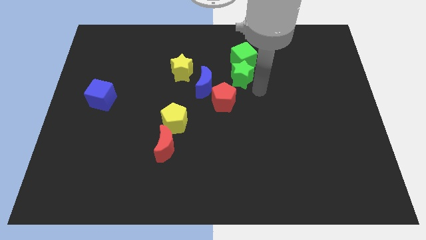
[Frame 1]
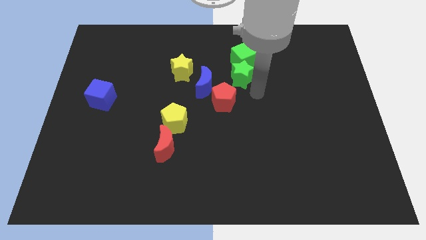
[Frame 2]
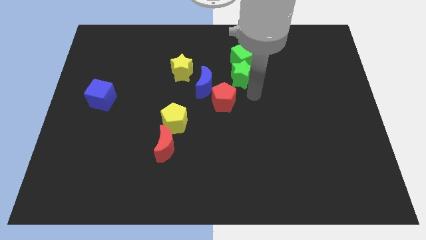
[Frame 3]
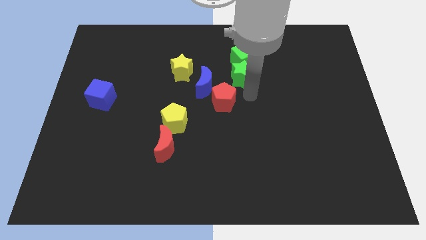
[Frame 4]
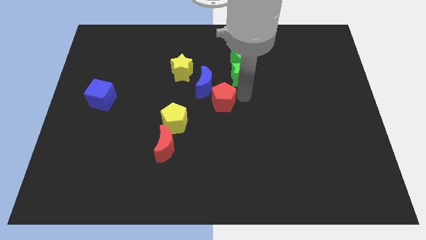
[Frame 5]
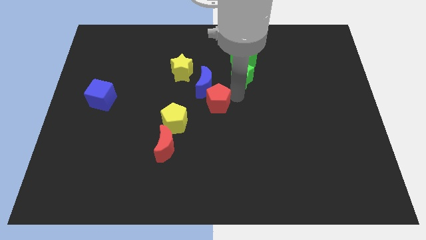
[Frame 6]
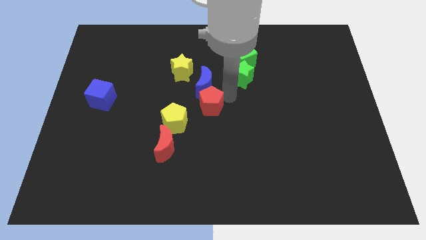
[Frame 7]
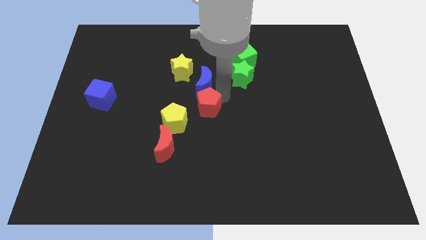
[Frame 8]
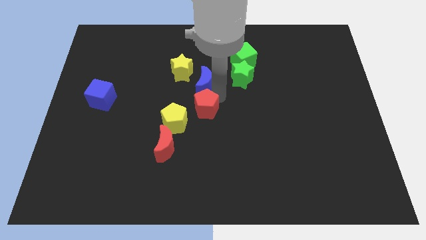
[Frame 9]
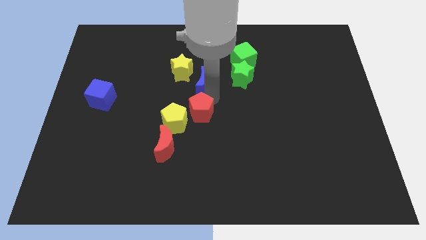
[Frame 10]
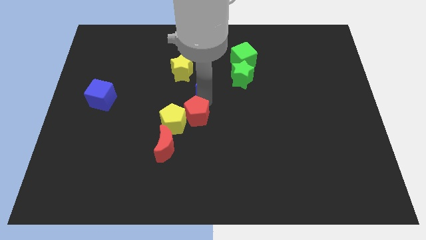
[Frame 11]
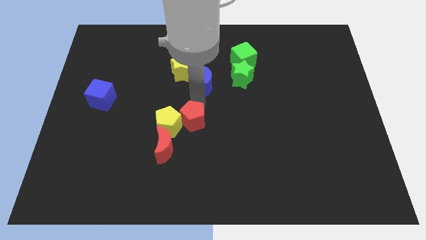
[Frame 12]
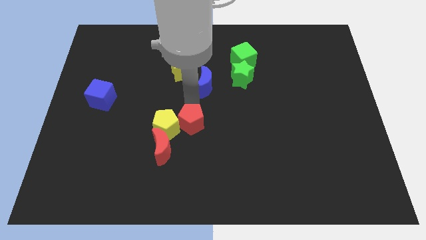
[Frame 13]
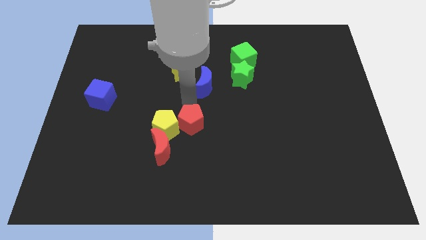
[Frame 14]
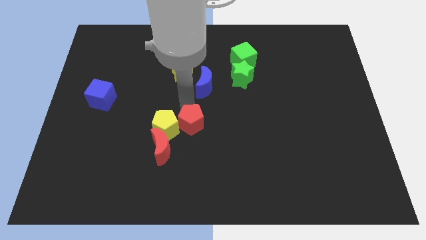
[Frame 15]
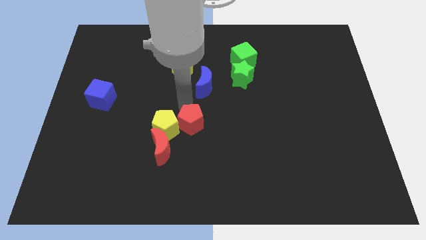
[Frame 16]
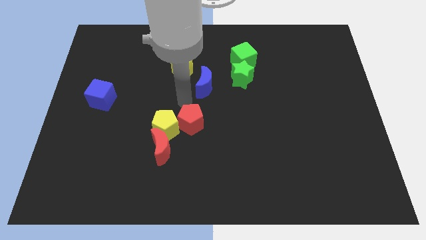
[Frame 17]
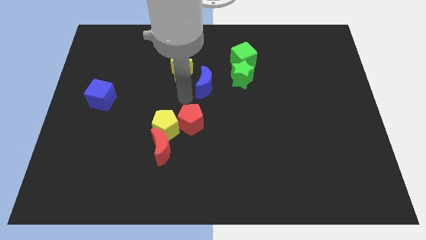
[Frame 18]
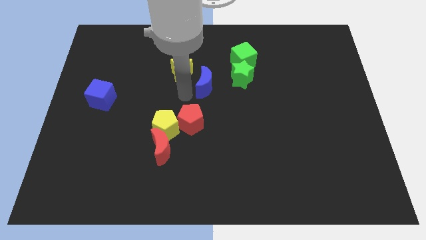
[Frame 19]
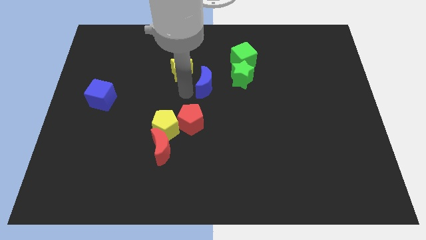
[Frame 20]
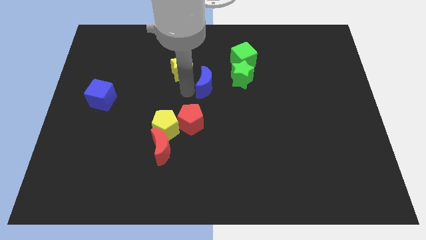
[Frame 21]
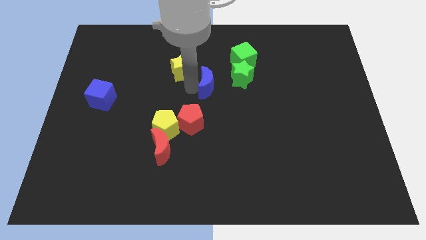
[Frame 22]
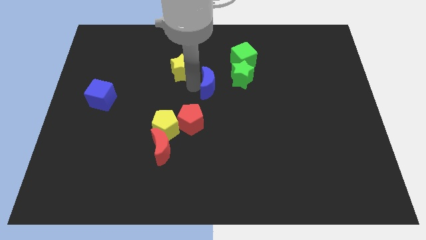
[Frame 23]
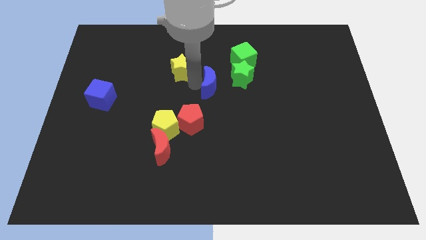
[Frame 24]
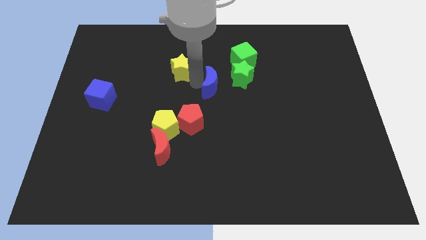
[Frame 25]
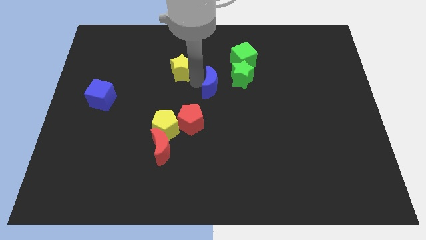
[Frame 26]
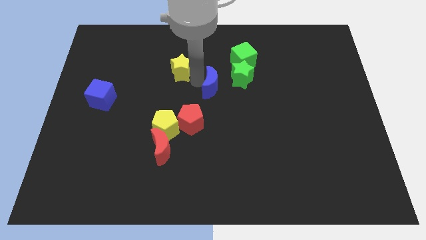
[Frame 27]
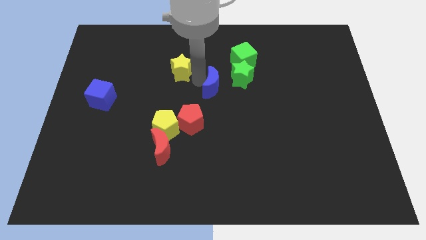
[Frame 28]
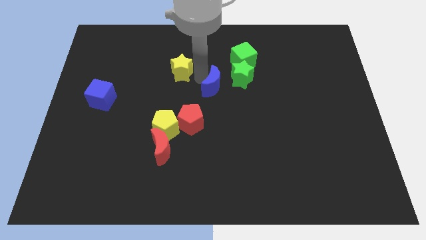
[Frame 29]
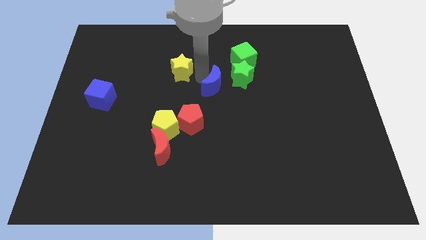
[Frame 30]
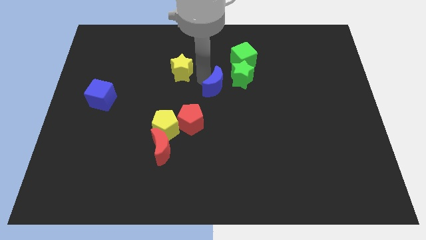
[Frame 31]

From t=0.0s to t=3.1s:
move the red pentagon to the right side of the yellow pentagon

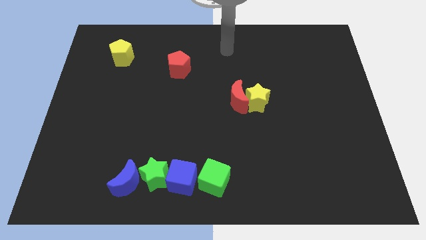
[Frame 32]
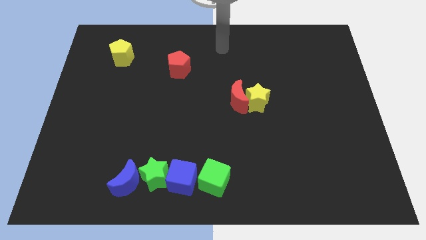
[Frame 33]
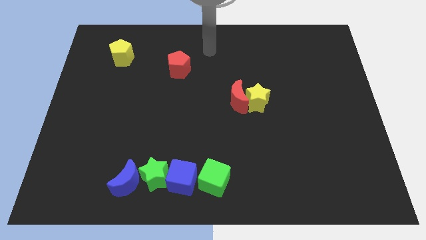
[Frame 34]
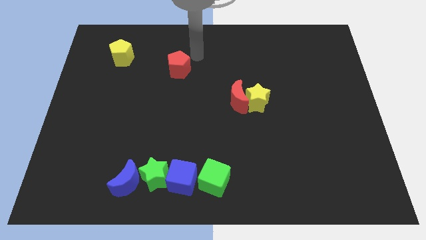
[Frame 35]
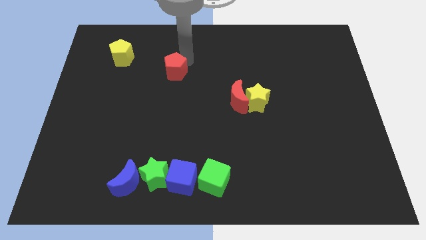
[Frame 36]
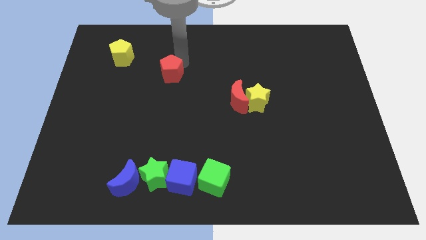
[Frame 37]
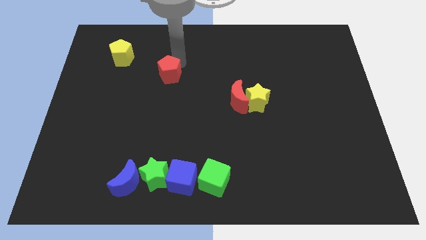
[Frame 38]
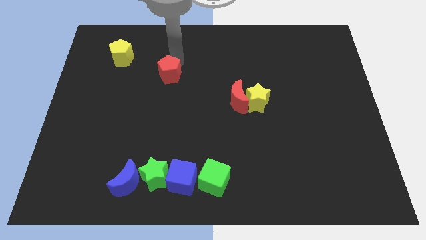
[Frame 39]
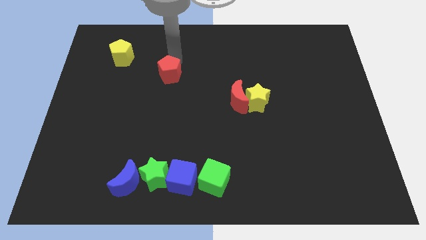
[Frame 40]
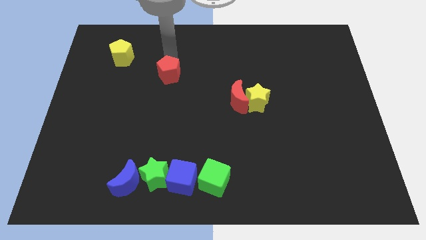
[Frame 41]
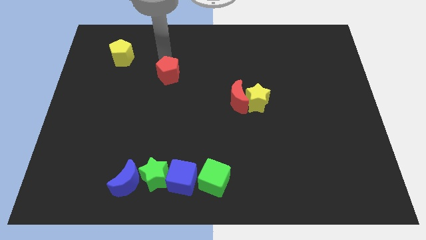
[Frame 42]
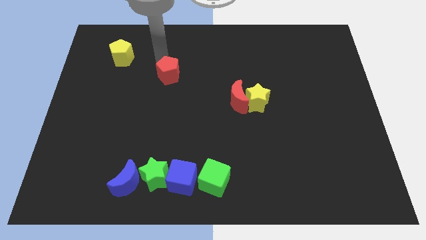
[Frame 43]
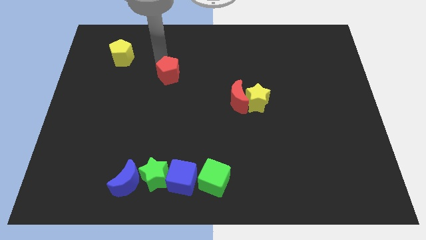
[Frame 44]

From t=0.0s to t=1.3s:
adjust the red pentagon between the yellow pentagon and red moon

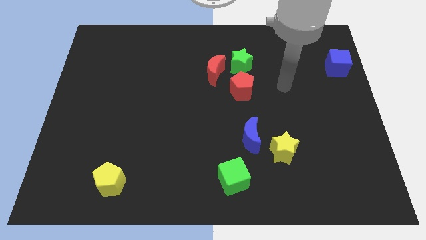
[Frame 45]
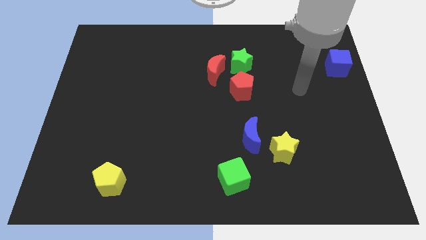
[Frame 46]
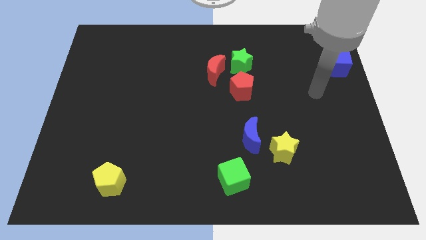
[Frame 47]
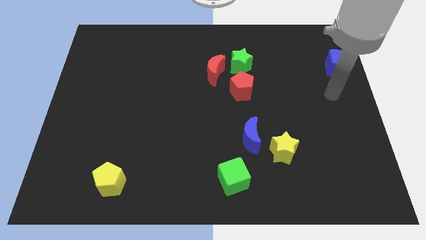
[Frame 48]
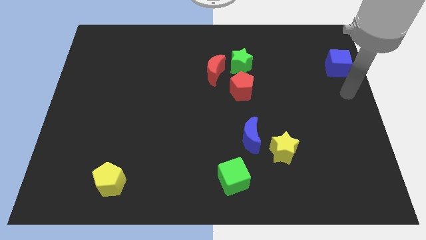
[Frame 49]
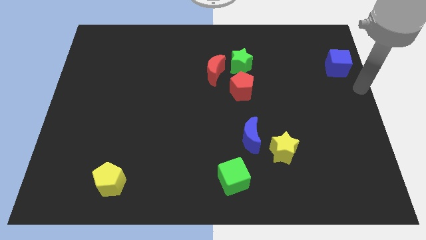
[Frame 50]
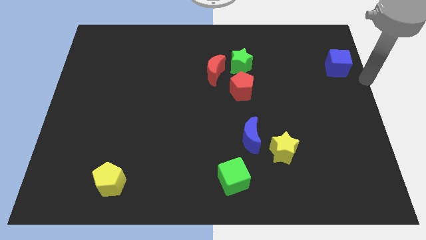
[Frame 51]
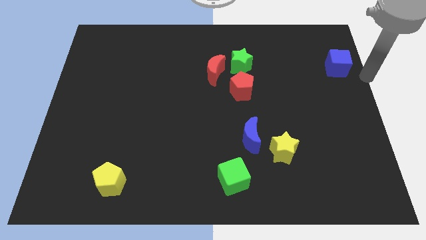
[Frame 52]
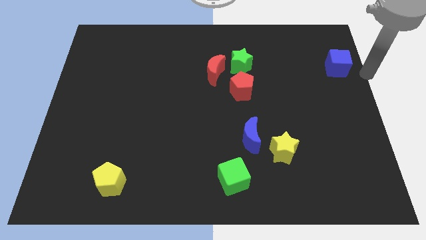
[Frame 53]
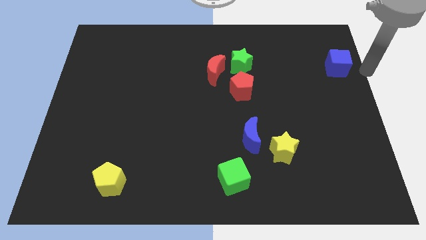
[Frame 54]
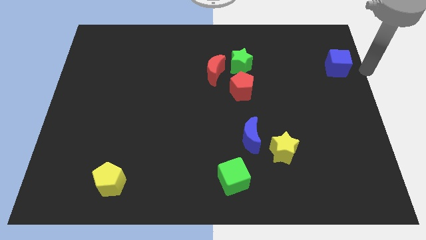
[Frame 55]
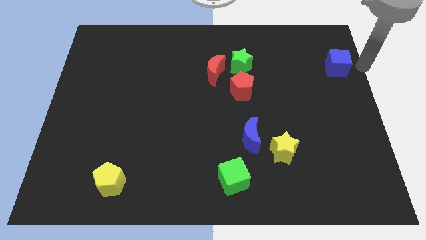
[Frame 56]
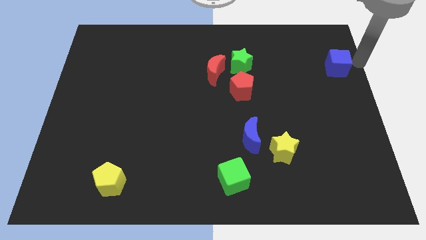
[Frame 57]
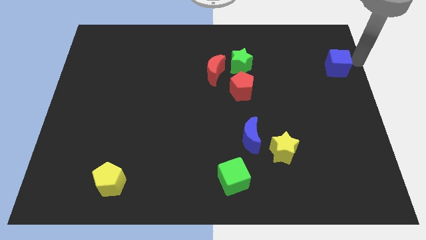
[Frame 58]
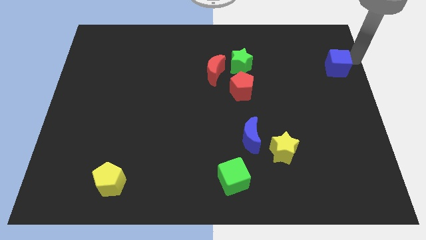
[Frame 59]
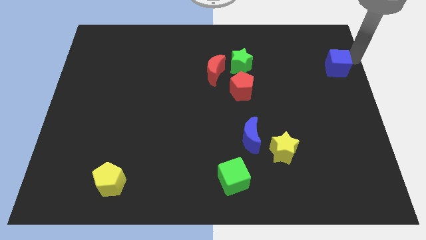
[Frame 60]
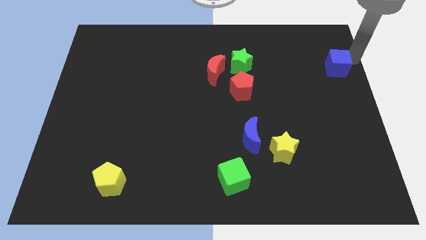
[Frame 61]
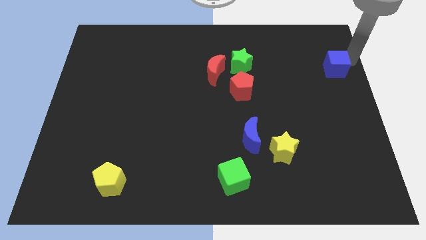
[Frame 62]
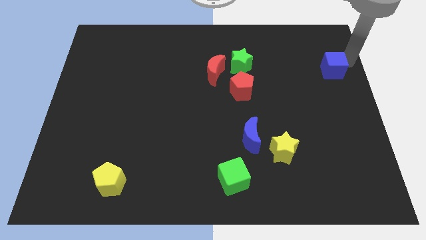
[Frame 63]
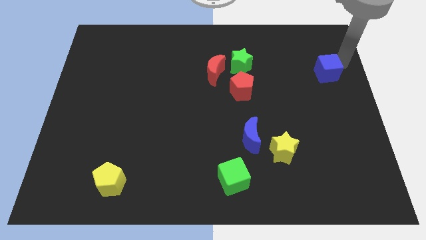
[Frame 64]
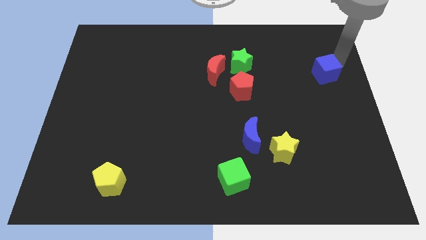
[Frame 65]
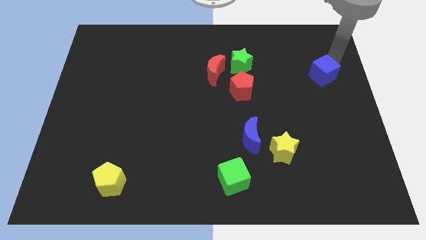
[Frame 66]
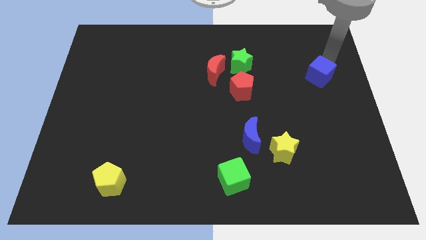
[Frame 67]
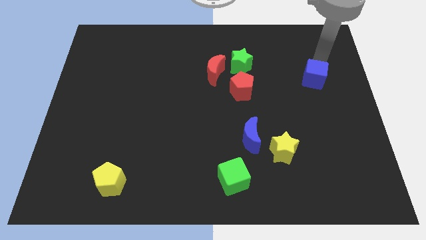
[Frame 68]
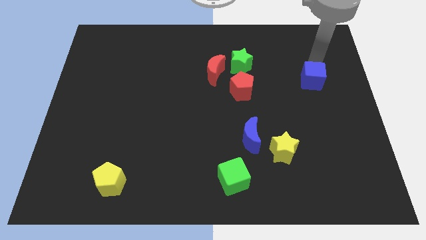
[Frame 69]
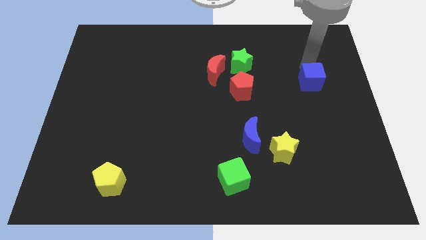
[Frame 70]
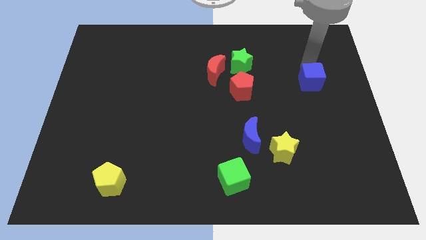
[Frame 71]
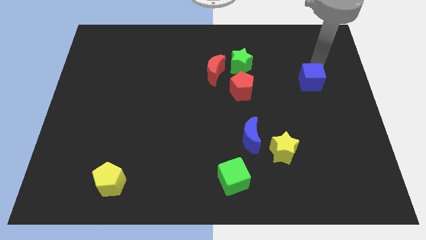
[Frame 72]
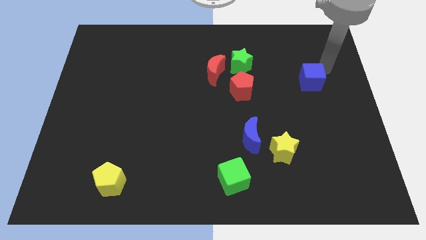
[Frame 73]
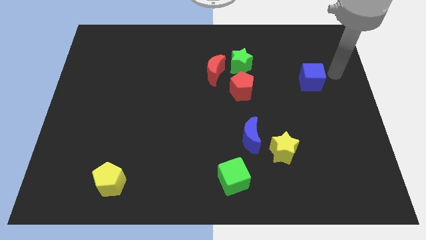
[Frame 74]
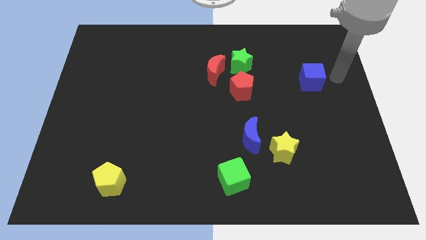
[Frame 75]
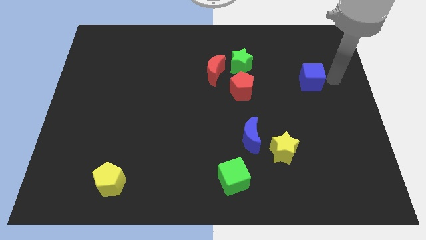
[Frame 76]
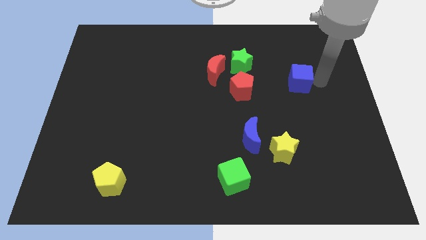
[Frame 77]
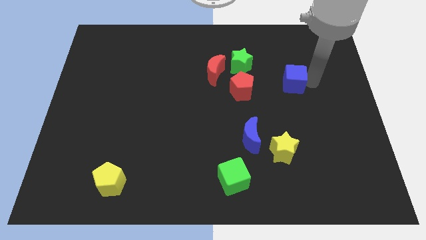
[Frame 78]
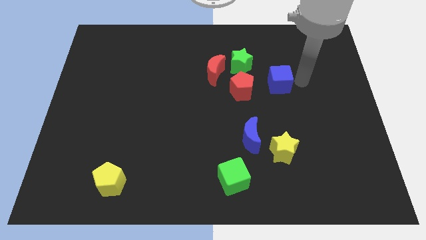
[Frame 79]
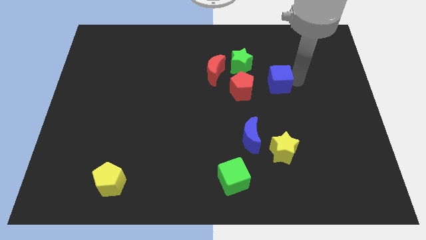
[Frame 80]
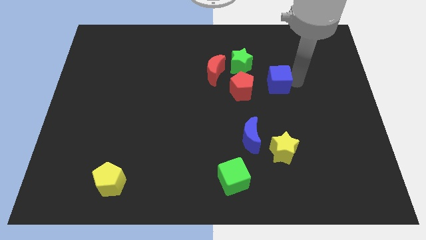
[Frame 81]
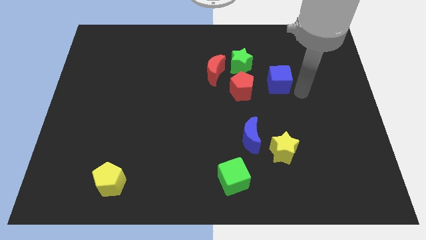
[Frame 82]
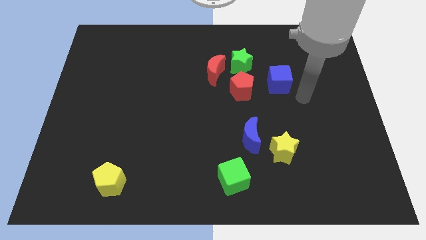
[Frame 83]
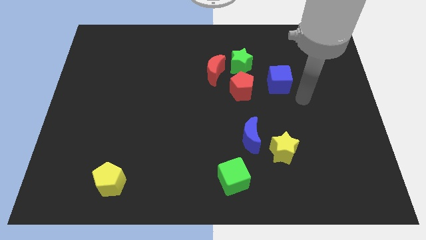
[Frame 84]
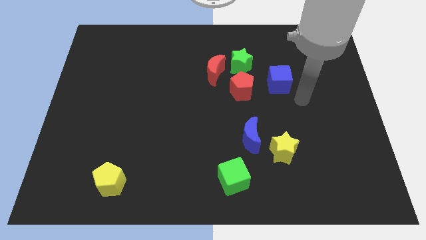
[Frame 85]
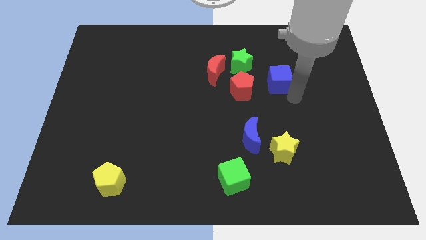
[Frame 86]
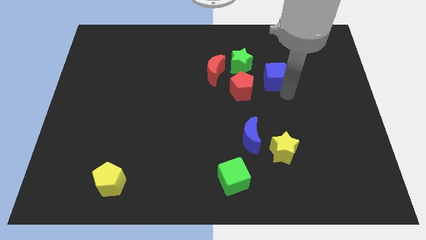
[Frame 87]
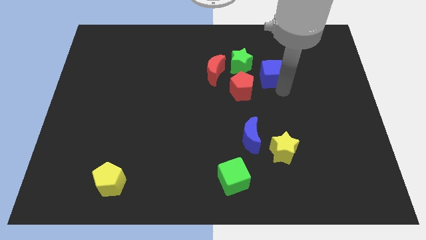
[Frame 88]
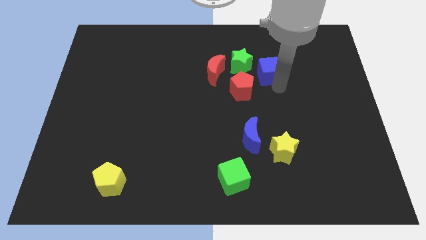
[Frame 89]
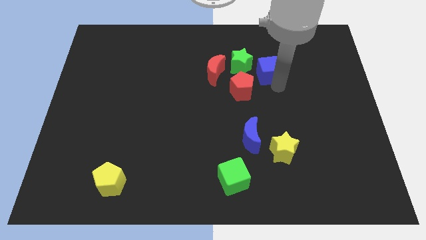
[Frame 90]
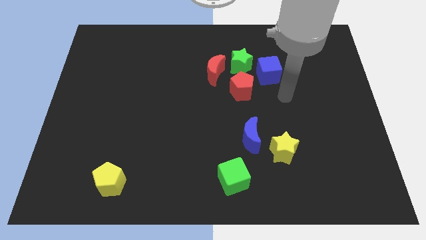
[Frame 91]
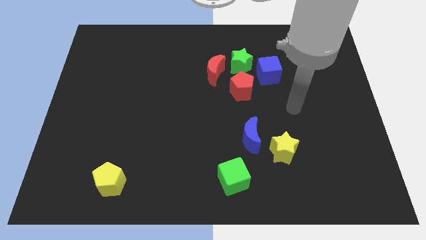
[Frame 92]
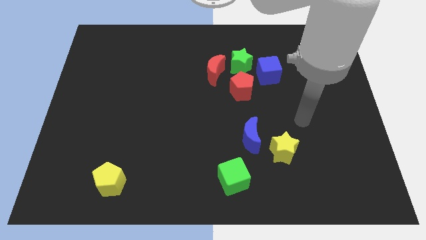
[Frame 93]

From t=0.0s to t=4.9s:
push the blue cube to the right of the green star
